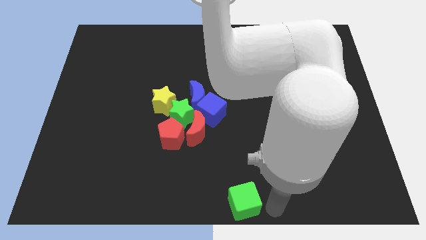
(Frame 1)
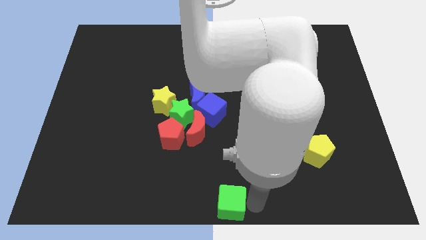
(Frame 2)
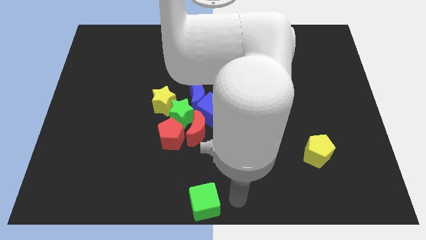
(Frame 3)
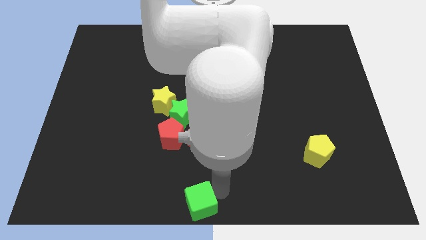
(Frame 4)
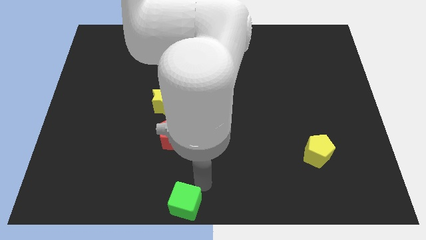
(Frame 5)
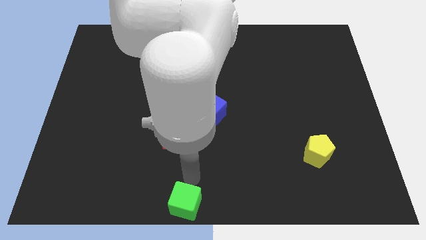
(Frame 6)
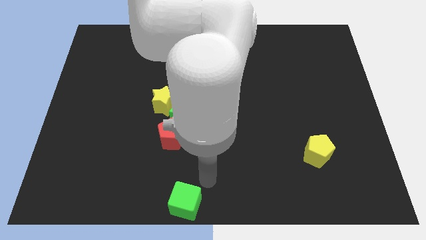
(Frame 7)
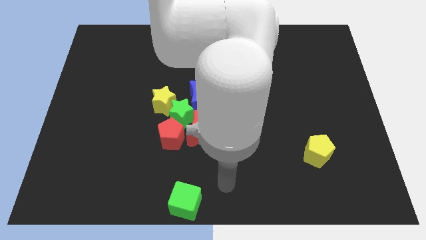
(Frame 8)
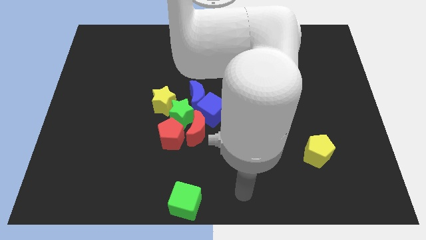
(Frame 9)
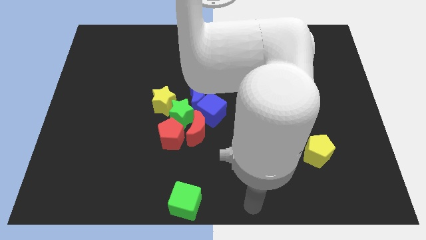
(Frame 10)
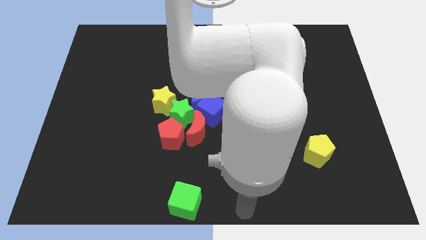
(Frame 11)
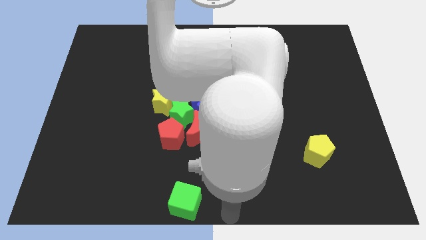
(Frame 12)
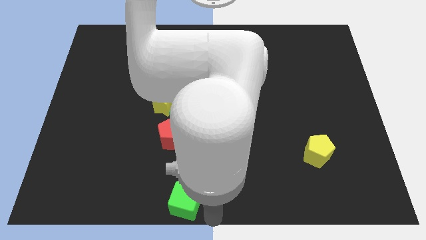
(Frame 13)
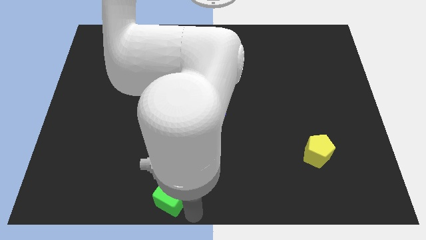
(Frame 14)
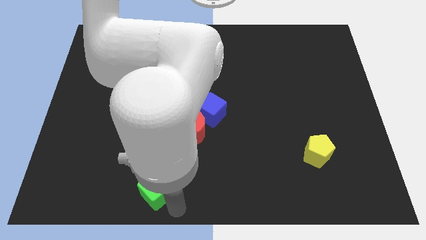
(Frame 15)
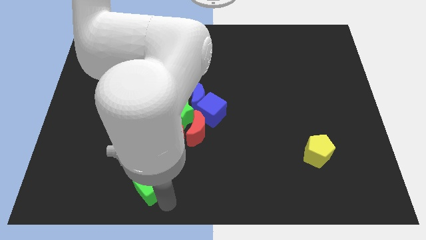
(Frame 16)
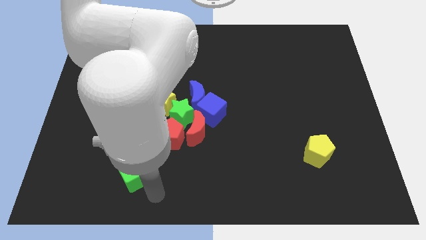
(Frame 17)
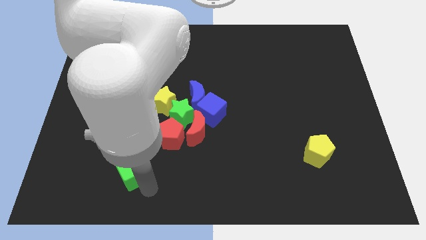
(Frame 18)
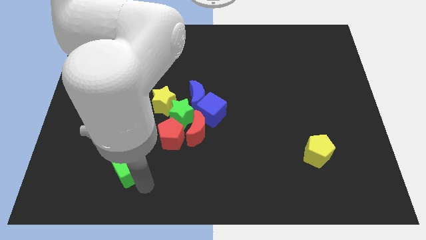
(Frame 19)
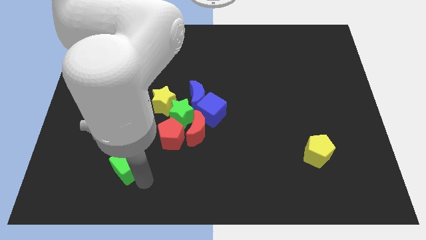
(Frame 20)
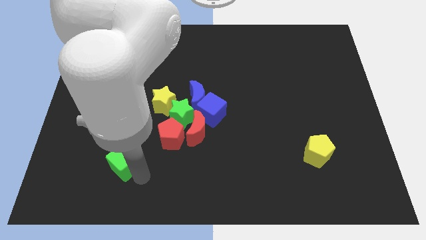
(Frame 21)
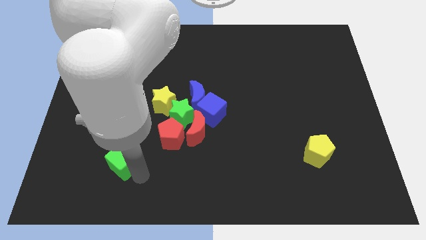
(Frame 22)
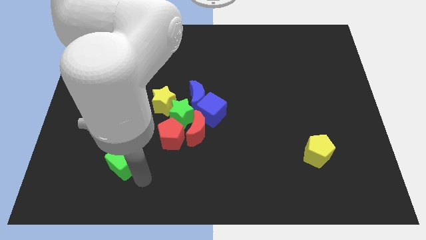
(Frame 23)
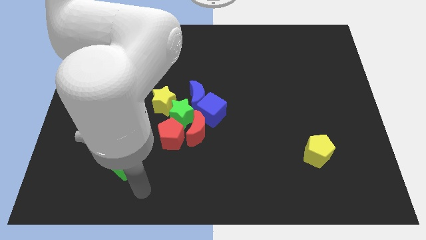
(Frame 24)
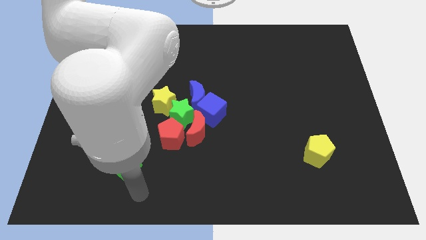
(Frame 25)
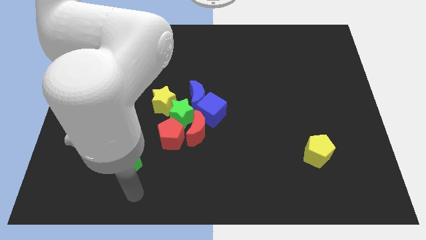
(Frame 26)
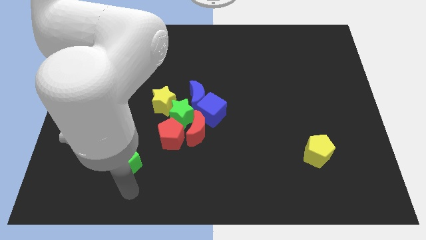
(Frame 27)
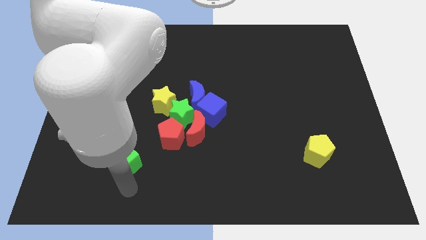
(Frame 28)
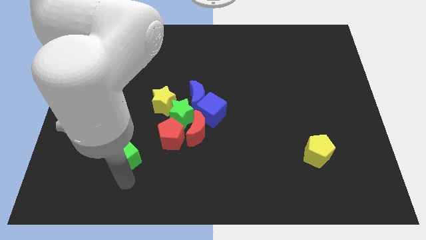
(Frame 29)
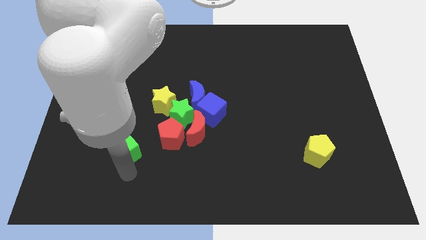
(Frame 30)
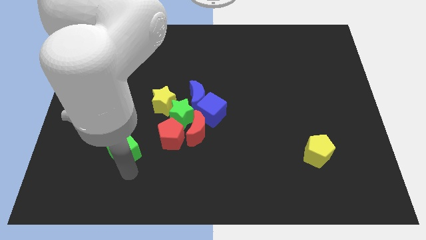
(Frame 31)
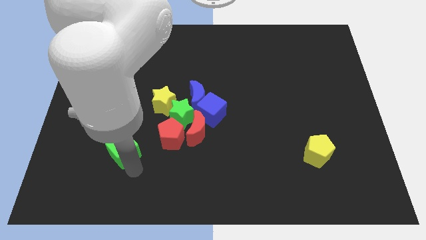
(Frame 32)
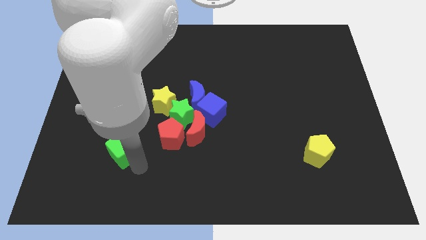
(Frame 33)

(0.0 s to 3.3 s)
push the green cube to the bottom left side of the red pentagon

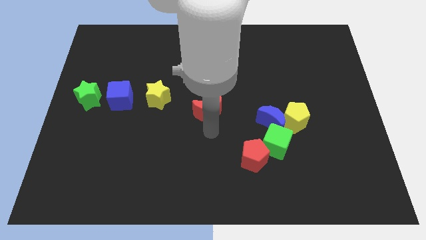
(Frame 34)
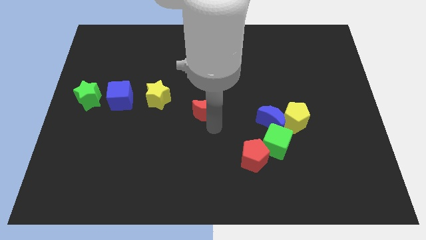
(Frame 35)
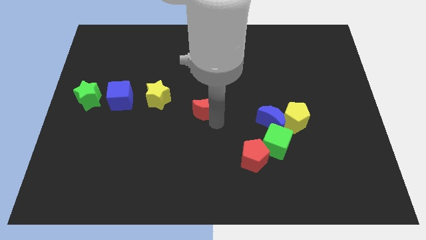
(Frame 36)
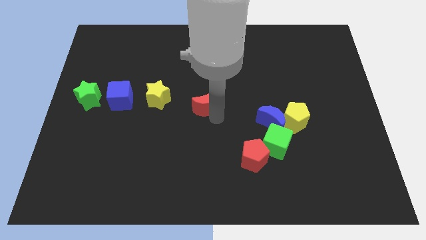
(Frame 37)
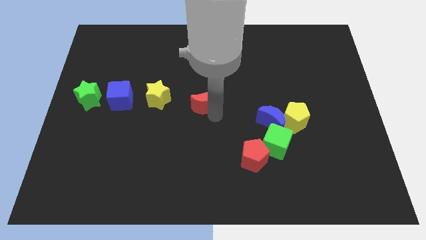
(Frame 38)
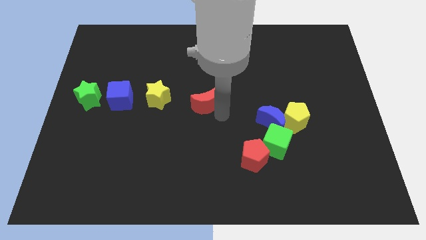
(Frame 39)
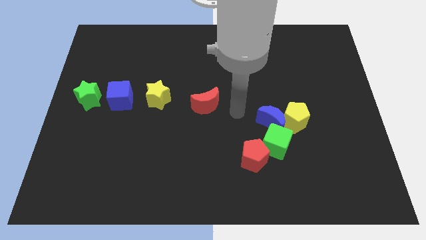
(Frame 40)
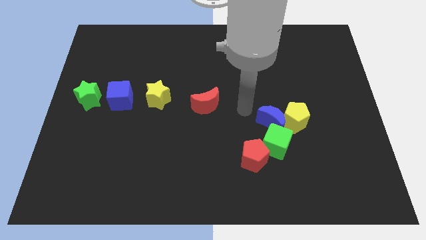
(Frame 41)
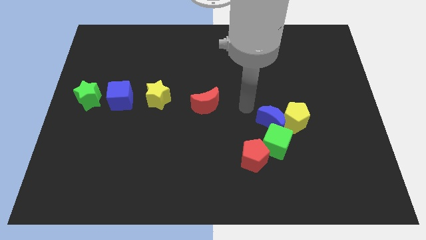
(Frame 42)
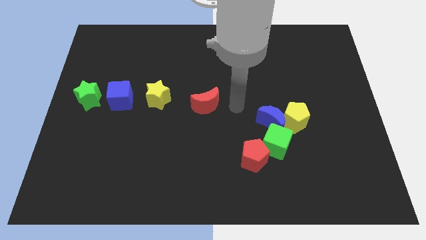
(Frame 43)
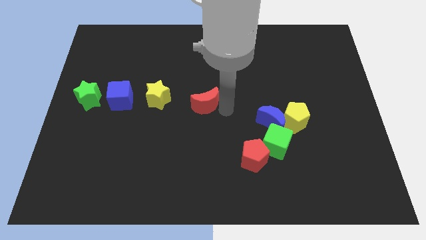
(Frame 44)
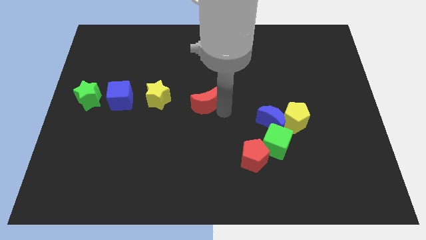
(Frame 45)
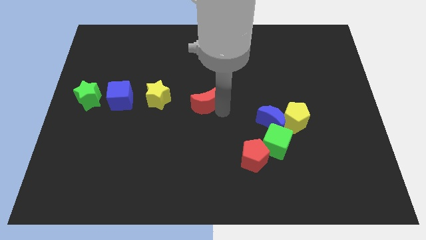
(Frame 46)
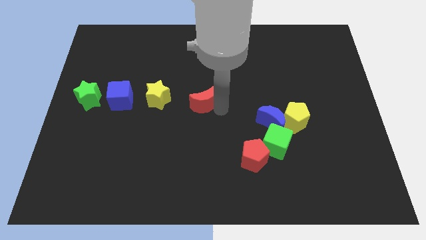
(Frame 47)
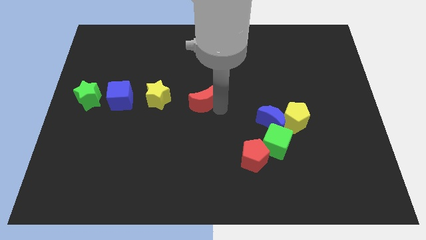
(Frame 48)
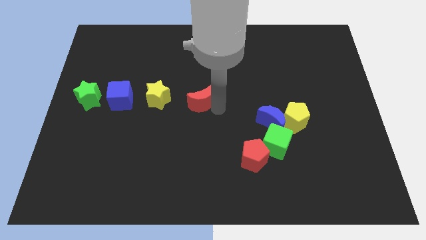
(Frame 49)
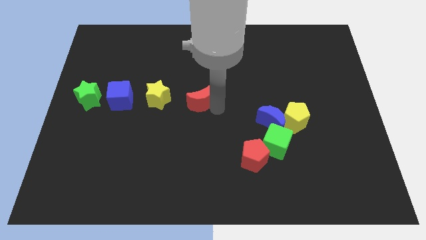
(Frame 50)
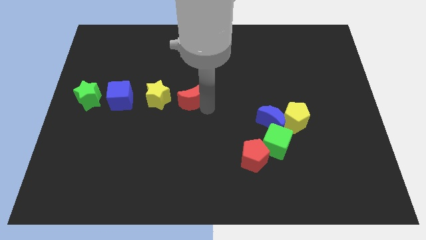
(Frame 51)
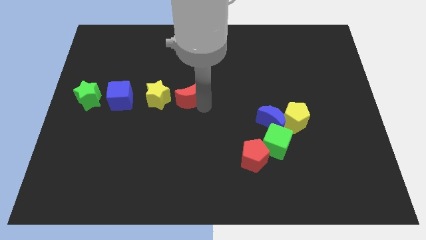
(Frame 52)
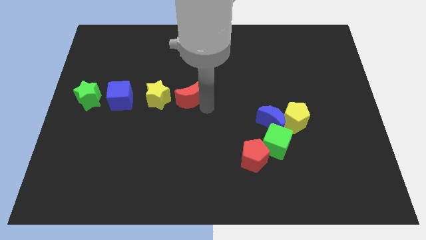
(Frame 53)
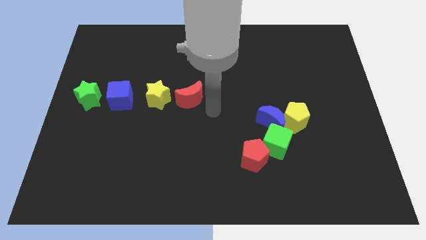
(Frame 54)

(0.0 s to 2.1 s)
move the red crescent to the right side of the yellow star

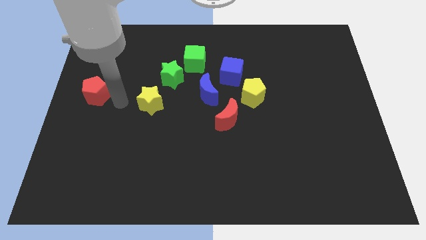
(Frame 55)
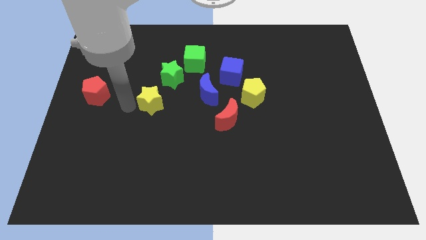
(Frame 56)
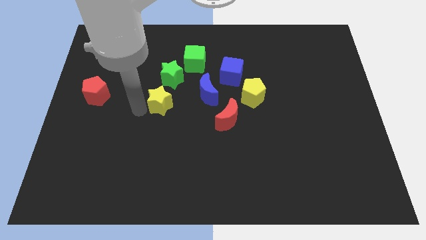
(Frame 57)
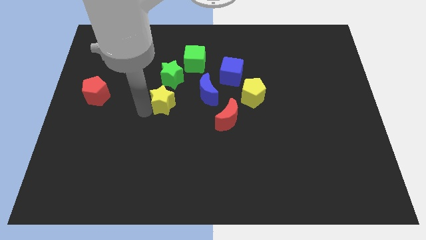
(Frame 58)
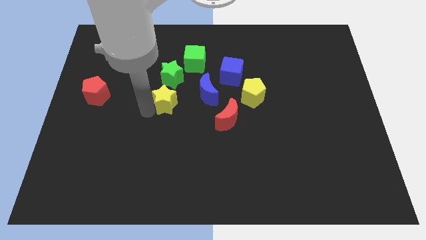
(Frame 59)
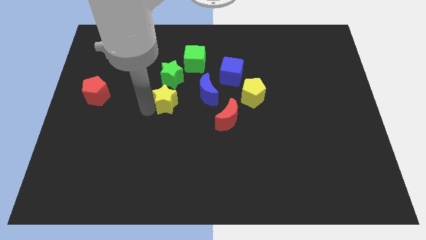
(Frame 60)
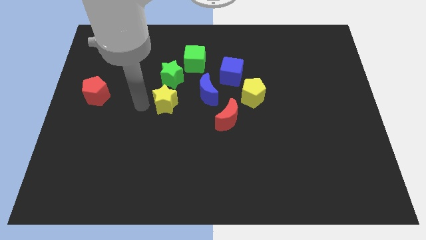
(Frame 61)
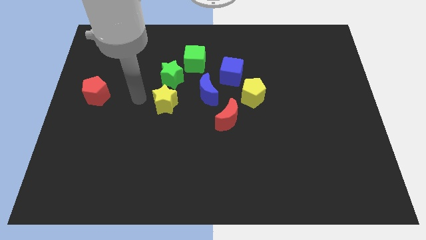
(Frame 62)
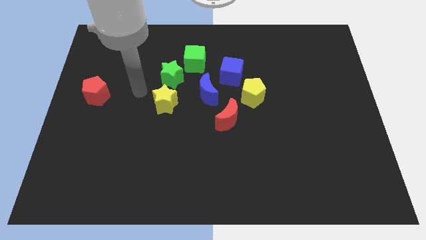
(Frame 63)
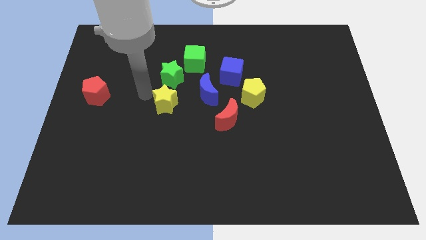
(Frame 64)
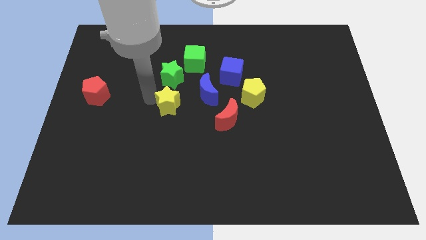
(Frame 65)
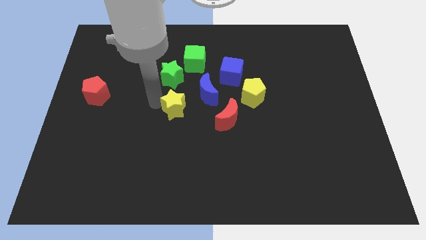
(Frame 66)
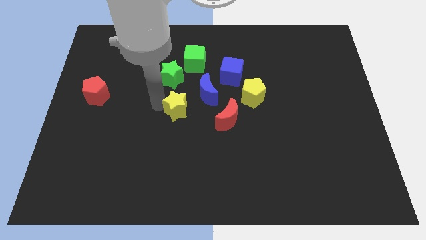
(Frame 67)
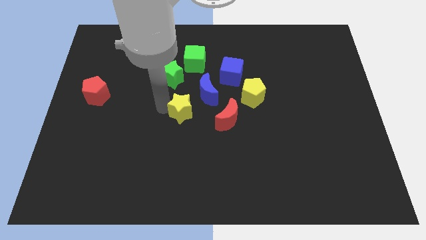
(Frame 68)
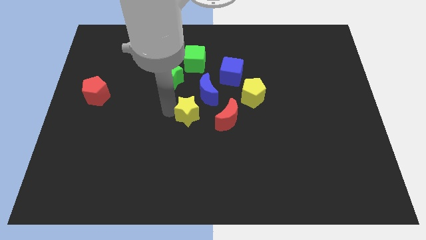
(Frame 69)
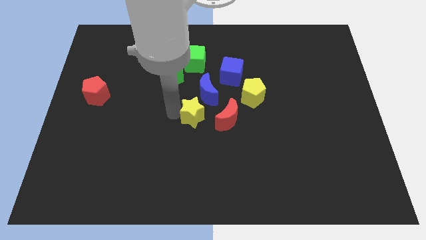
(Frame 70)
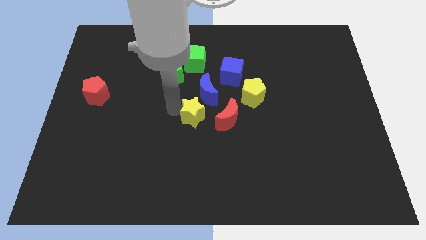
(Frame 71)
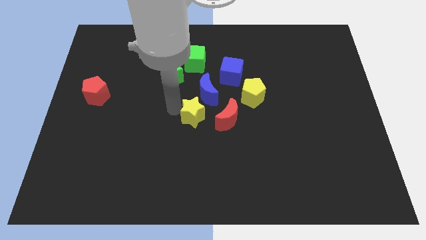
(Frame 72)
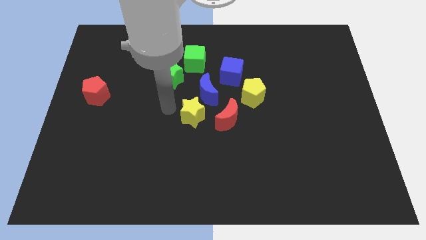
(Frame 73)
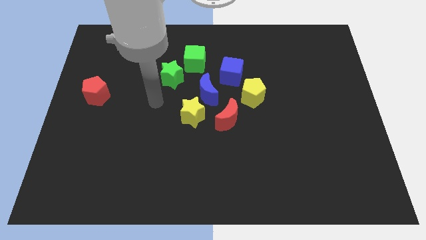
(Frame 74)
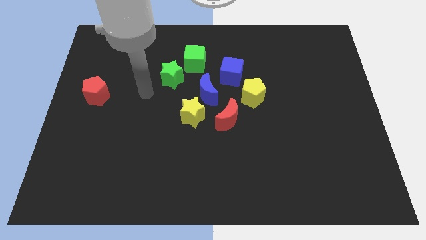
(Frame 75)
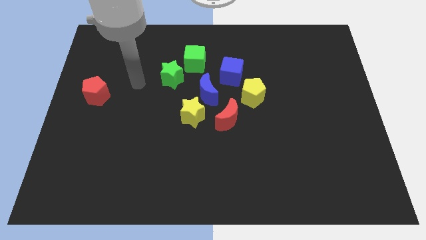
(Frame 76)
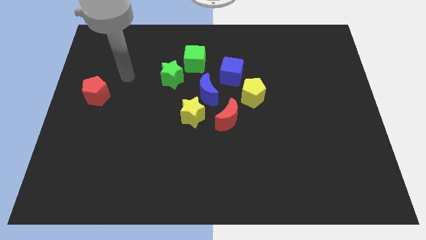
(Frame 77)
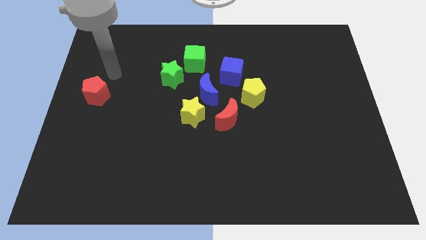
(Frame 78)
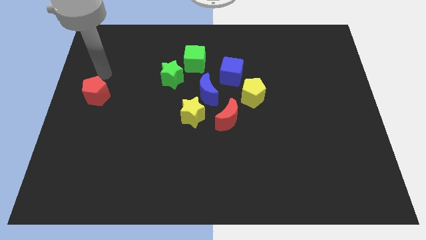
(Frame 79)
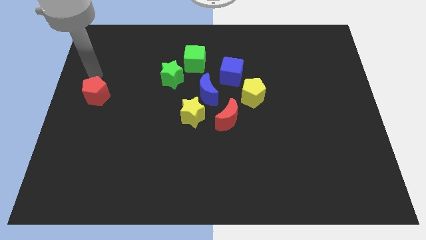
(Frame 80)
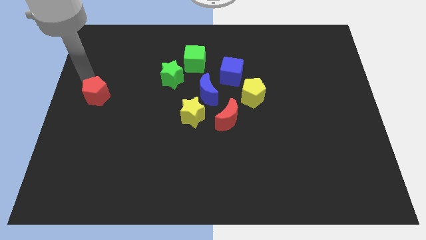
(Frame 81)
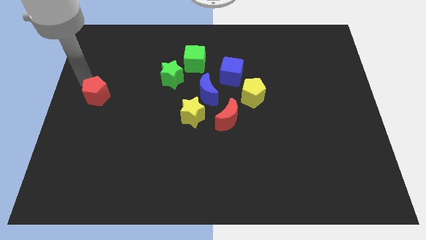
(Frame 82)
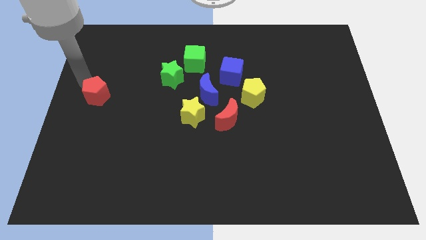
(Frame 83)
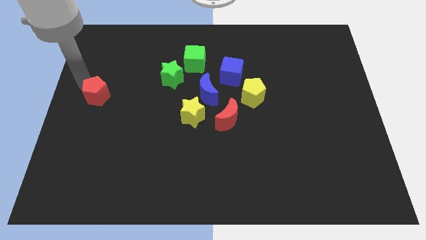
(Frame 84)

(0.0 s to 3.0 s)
put the yellow star below the green cube

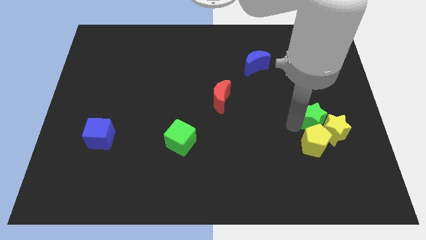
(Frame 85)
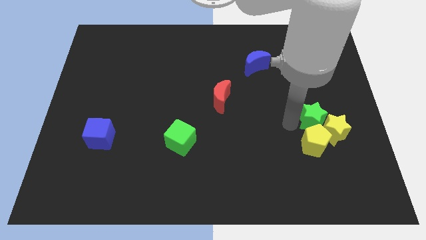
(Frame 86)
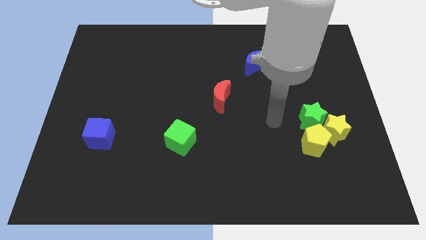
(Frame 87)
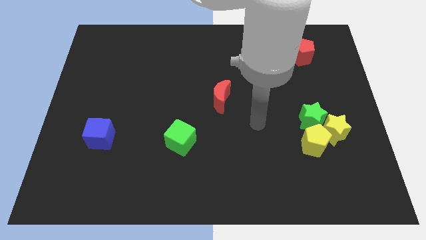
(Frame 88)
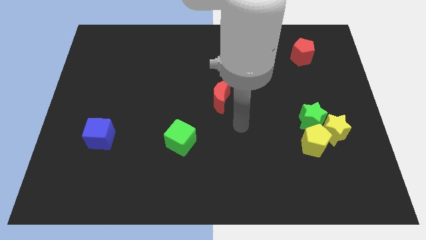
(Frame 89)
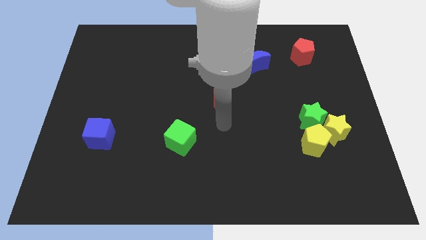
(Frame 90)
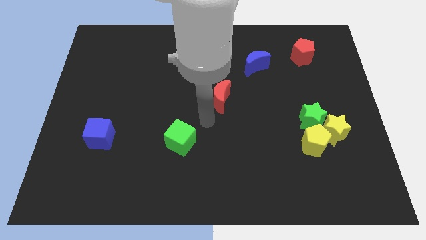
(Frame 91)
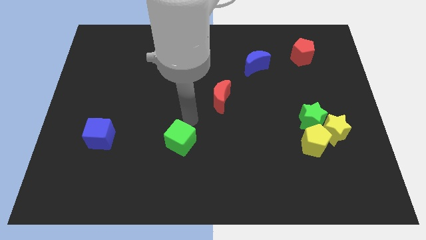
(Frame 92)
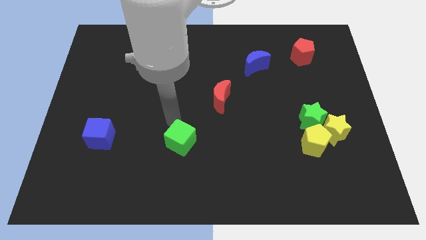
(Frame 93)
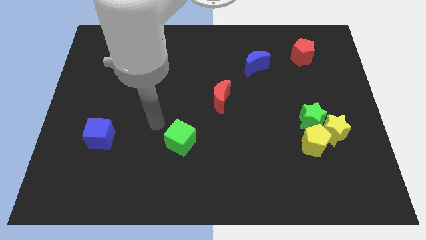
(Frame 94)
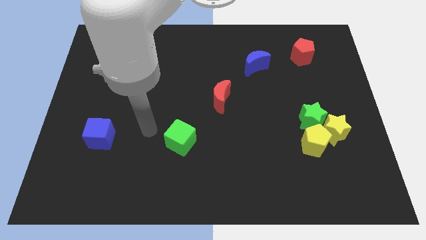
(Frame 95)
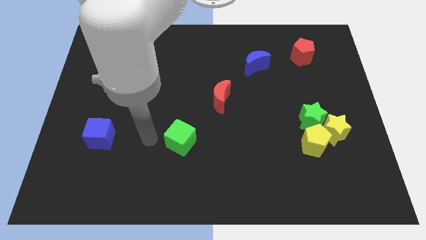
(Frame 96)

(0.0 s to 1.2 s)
point your arm at the left side of the green cube
